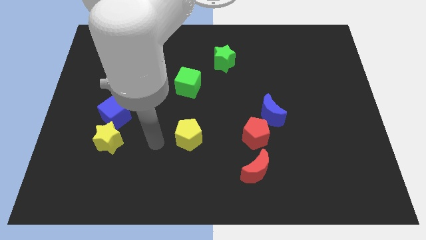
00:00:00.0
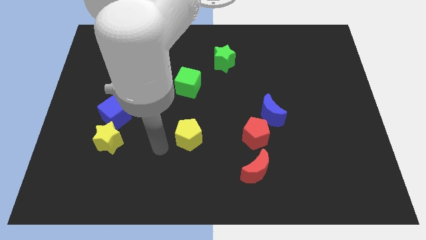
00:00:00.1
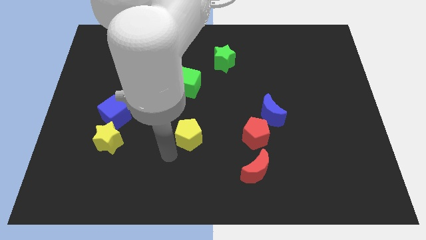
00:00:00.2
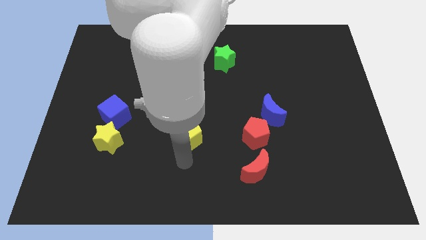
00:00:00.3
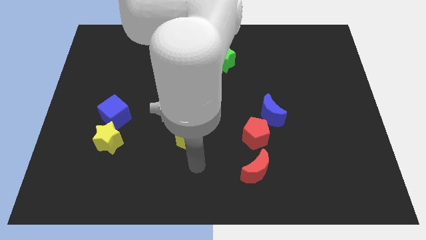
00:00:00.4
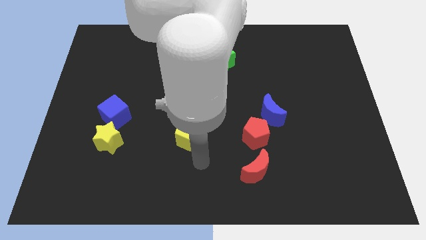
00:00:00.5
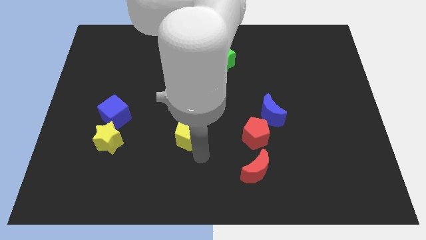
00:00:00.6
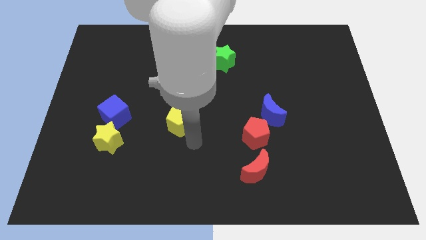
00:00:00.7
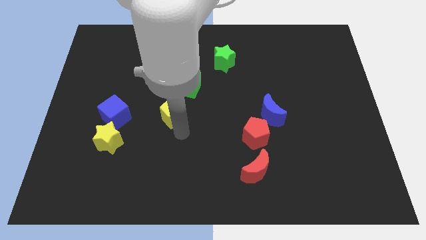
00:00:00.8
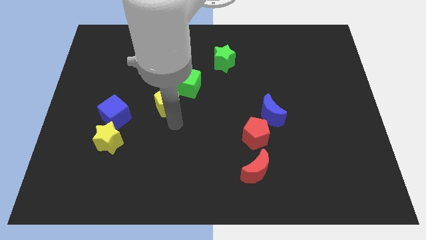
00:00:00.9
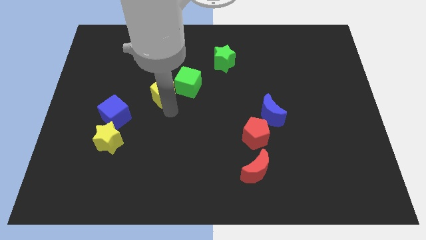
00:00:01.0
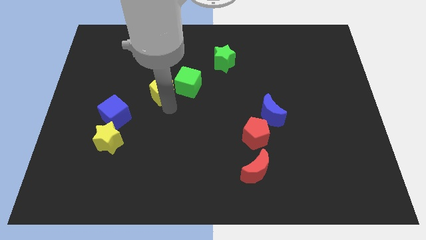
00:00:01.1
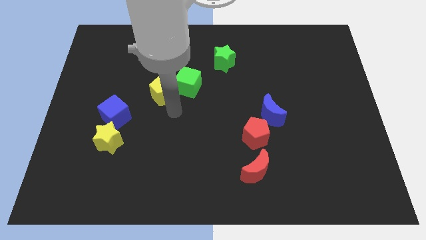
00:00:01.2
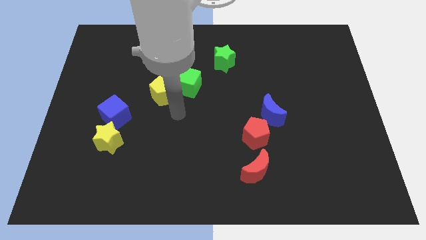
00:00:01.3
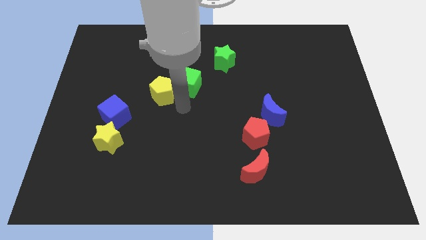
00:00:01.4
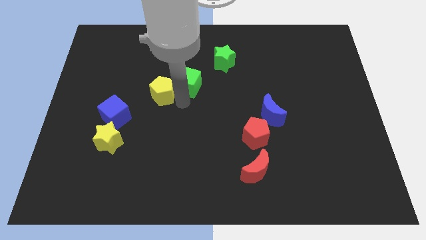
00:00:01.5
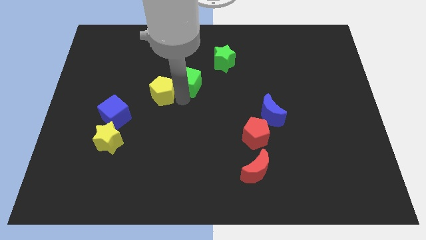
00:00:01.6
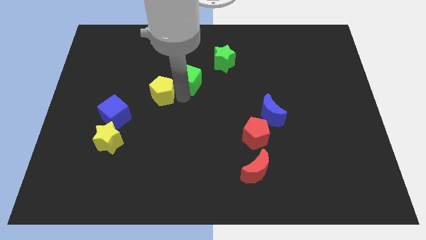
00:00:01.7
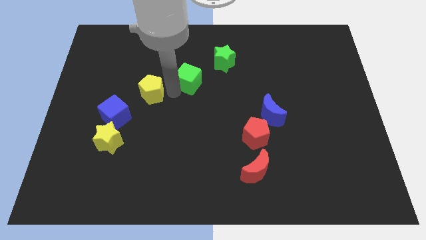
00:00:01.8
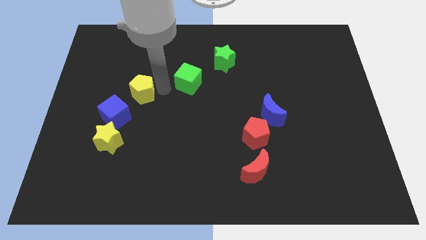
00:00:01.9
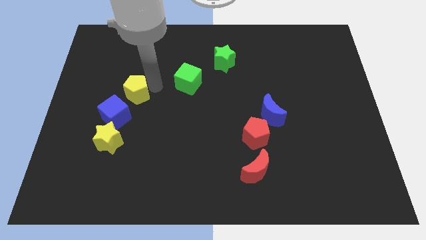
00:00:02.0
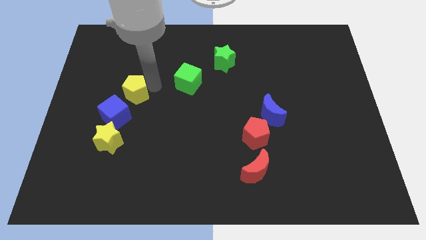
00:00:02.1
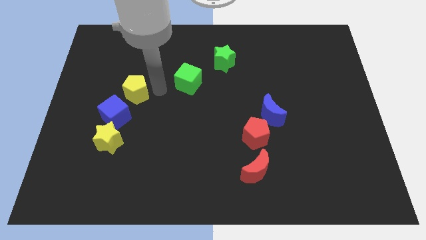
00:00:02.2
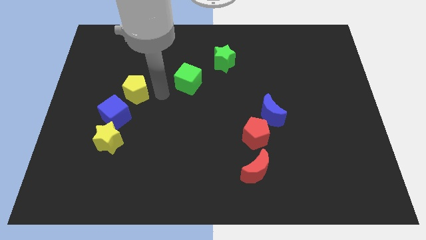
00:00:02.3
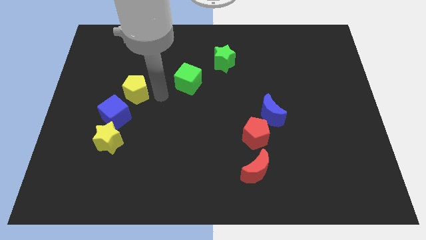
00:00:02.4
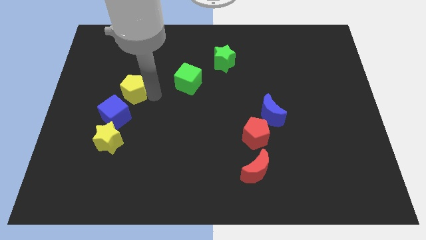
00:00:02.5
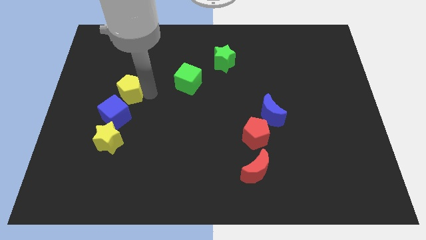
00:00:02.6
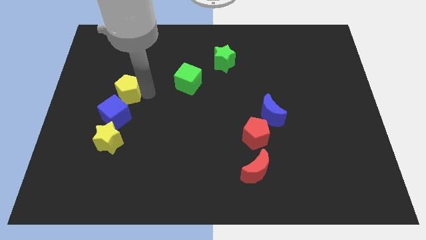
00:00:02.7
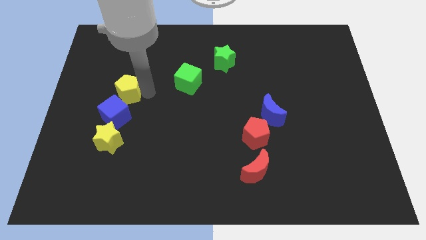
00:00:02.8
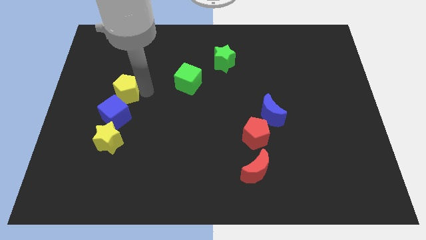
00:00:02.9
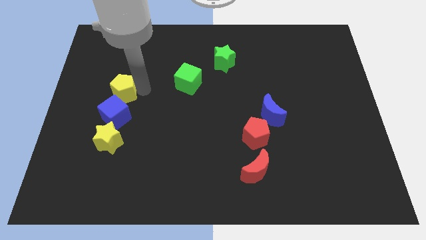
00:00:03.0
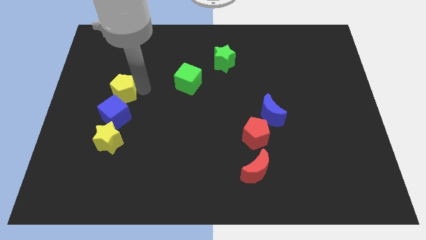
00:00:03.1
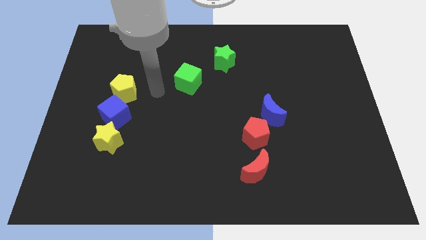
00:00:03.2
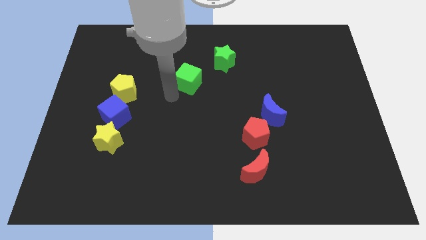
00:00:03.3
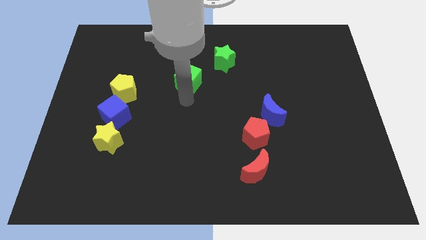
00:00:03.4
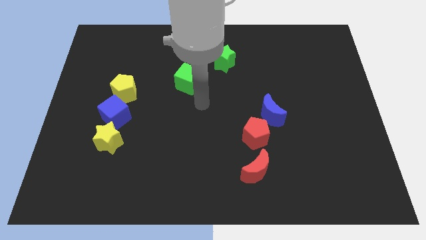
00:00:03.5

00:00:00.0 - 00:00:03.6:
place the yellow pentagon at the top of the blue cube

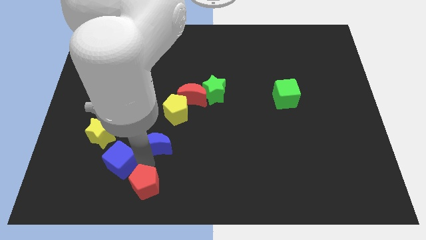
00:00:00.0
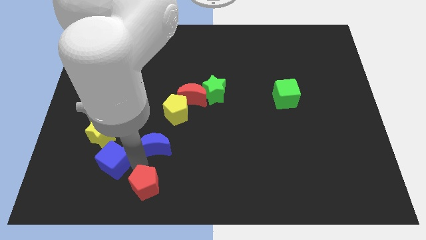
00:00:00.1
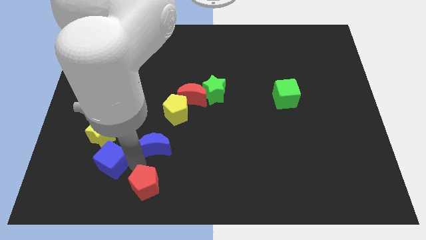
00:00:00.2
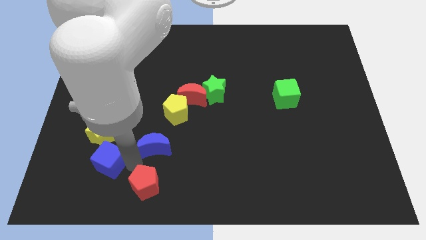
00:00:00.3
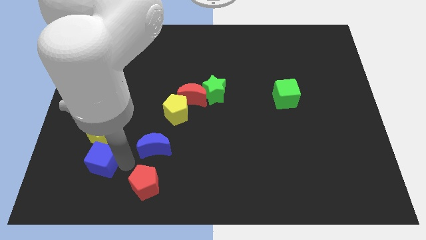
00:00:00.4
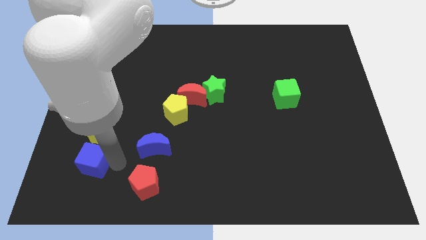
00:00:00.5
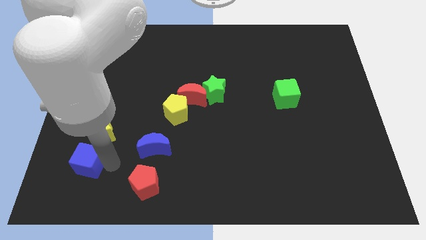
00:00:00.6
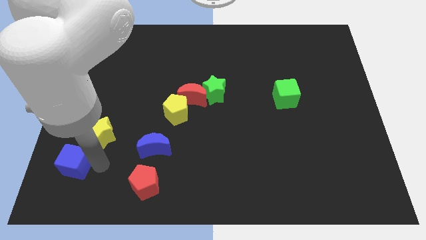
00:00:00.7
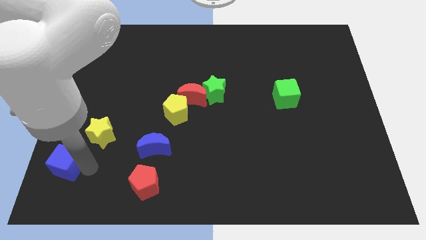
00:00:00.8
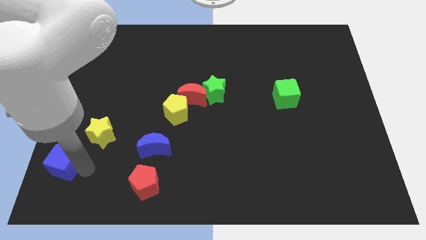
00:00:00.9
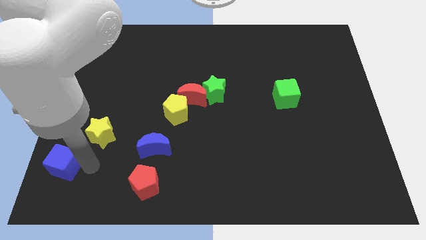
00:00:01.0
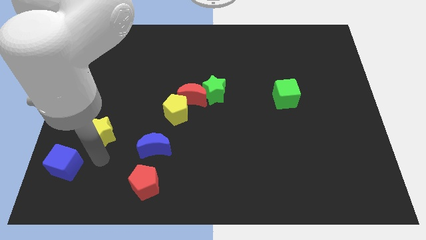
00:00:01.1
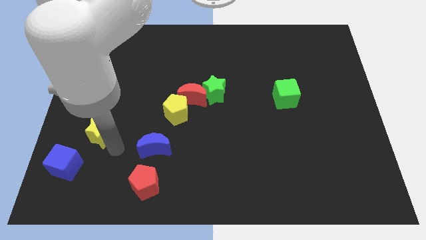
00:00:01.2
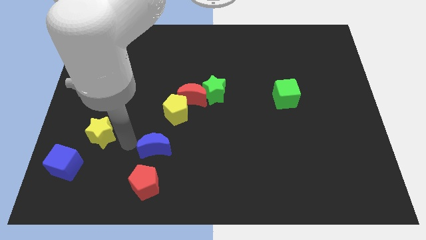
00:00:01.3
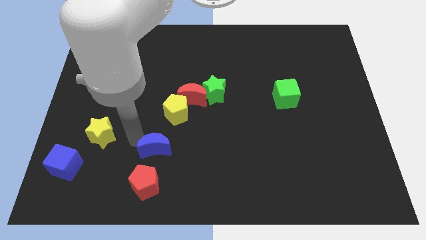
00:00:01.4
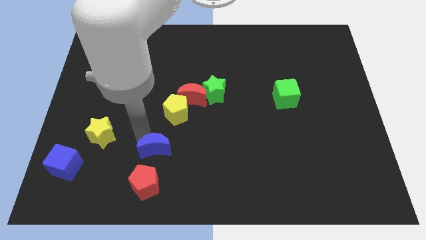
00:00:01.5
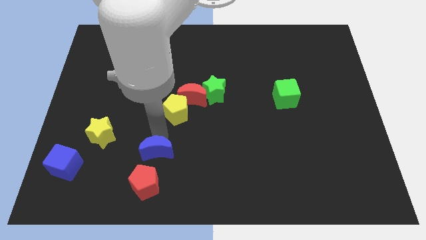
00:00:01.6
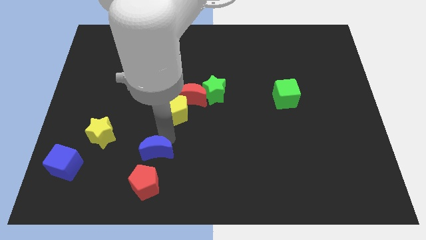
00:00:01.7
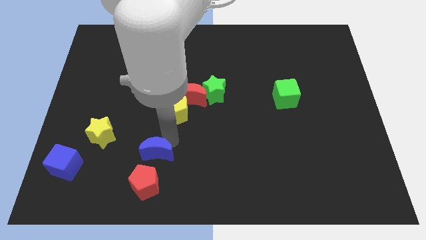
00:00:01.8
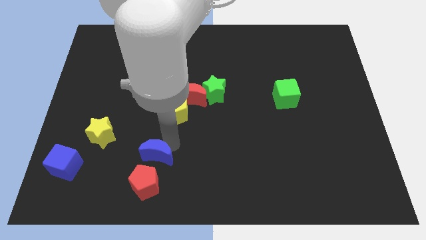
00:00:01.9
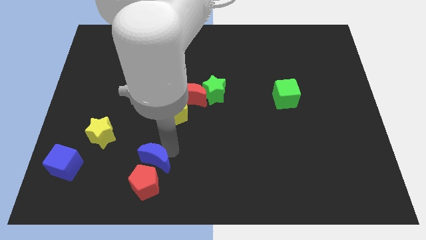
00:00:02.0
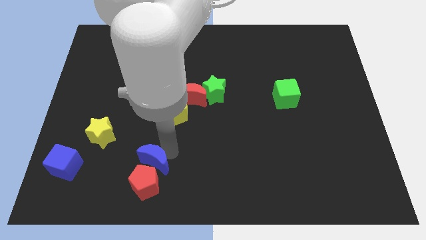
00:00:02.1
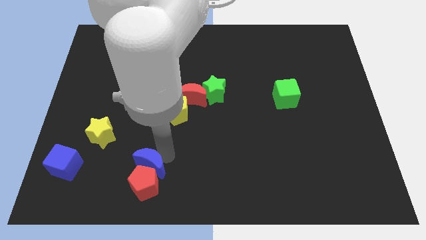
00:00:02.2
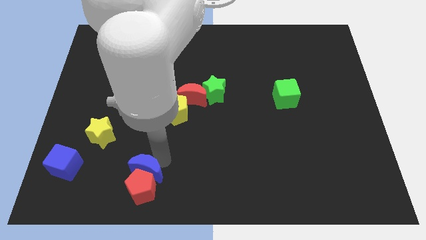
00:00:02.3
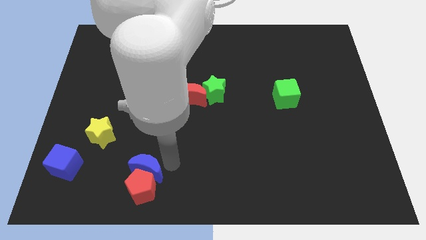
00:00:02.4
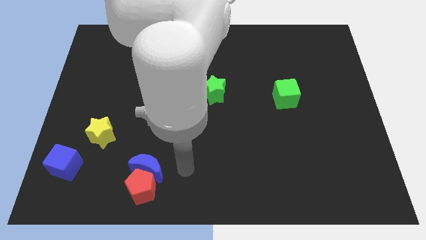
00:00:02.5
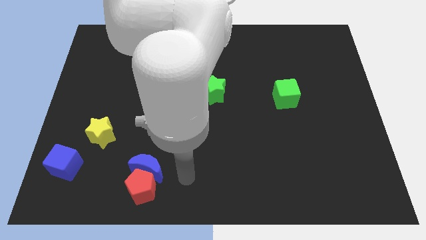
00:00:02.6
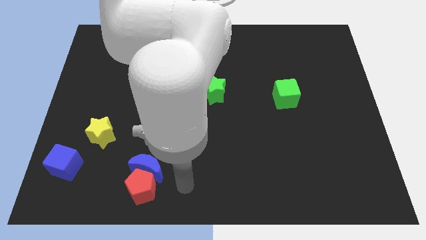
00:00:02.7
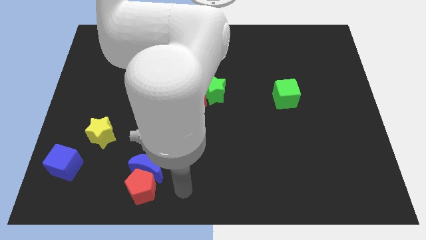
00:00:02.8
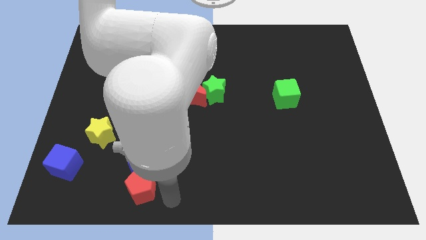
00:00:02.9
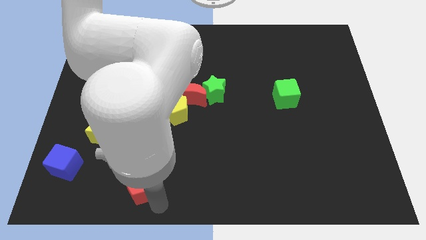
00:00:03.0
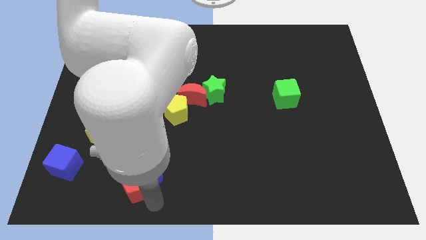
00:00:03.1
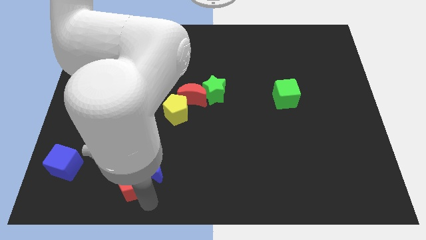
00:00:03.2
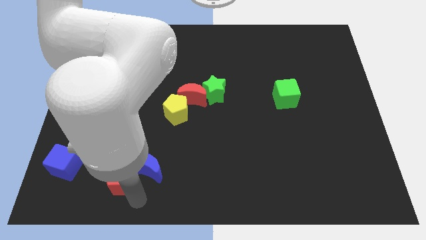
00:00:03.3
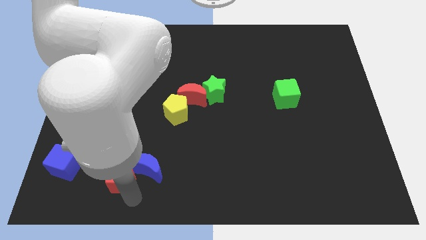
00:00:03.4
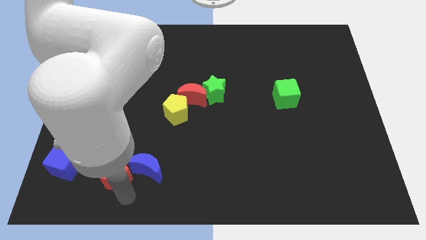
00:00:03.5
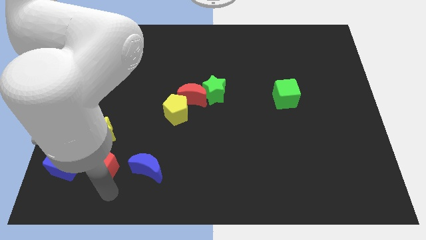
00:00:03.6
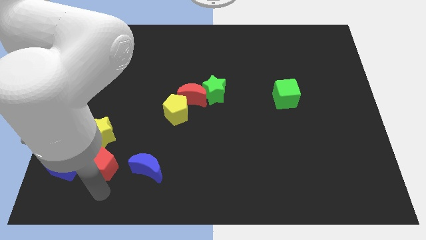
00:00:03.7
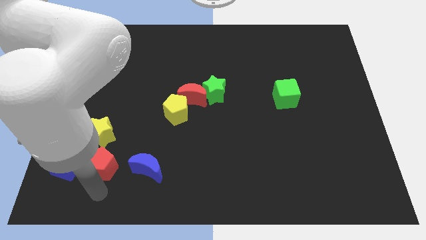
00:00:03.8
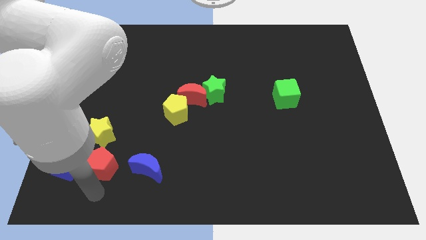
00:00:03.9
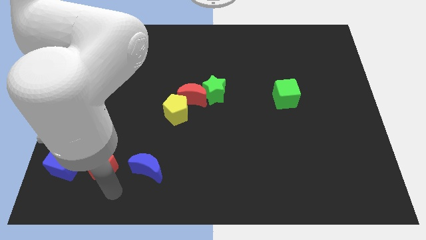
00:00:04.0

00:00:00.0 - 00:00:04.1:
push the blue blocks and red pentagon towards the left side of the board

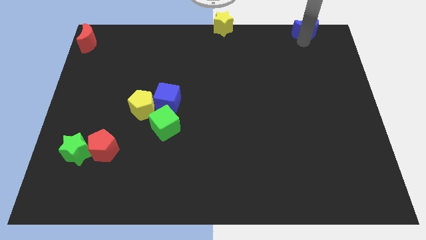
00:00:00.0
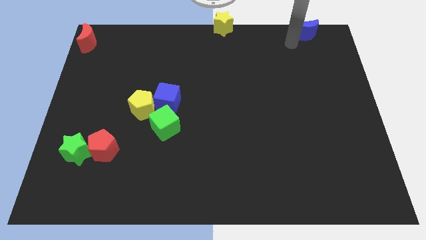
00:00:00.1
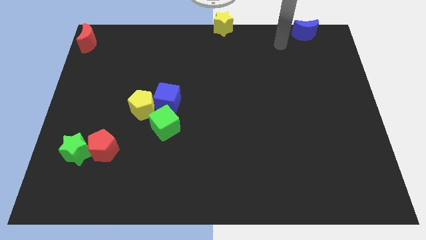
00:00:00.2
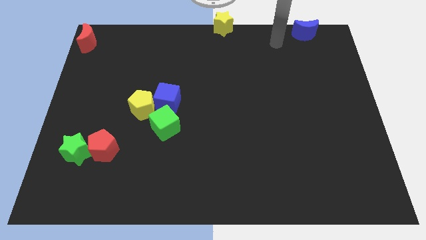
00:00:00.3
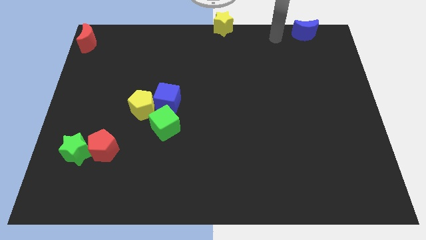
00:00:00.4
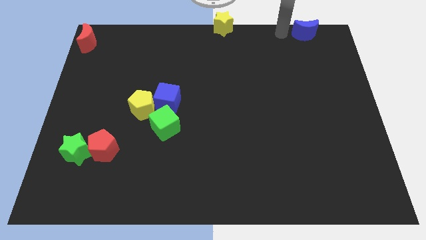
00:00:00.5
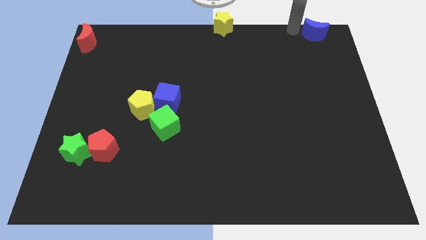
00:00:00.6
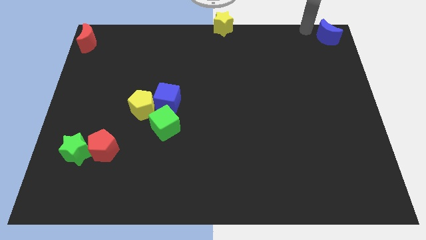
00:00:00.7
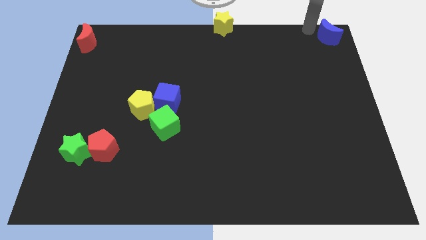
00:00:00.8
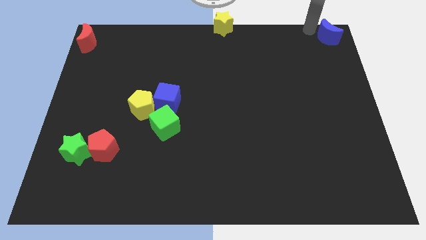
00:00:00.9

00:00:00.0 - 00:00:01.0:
place blue crescent on the right corner of the board

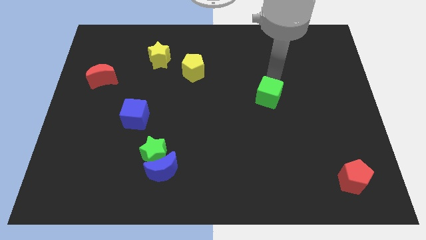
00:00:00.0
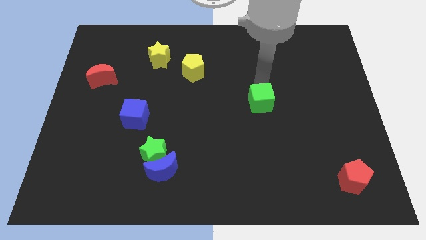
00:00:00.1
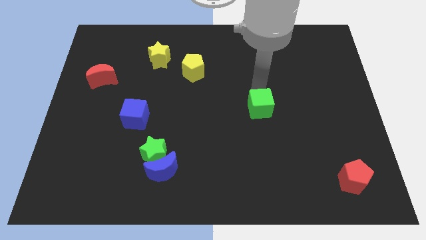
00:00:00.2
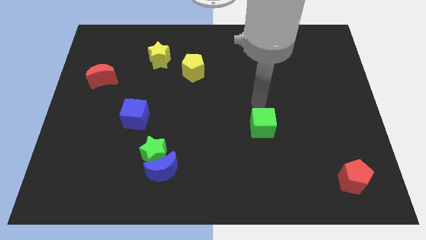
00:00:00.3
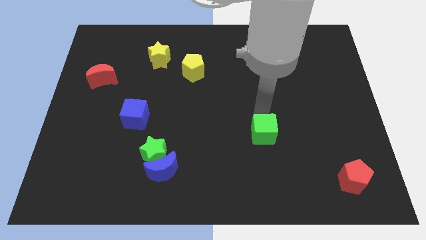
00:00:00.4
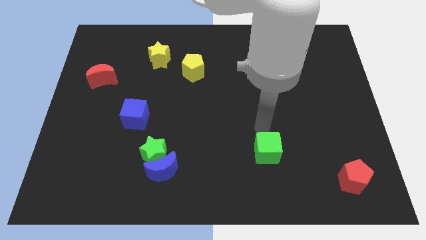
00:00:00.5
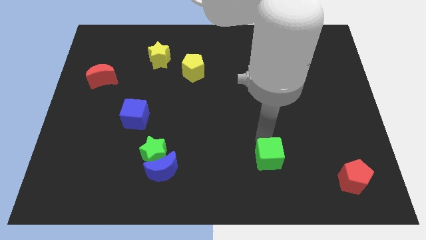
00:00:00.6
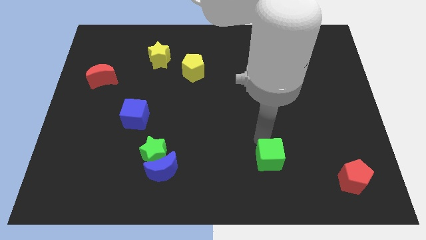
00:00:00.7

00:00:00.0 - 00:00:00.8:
move the green cube downwards to the board
